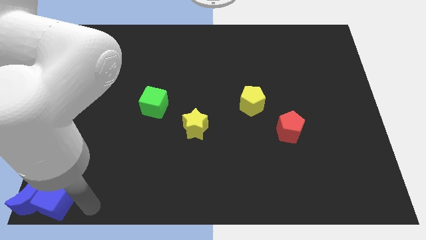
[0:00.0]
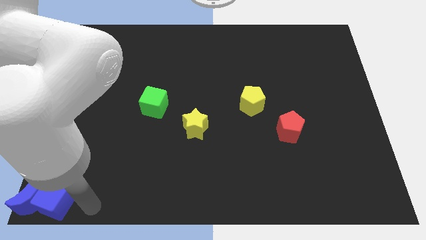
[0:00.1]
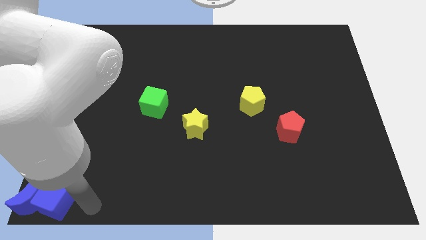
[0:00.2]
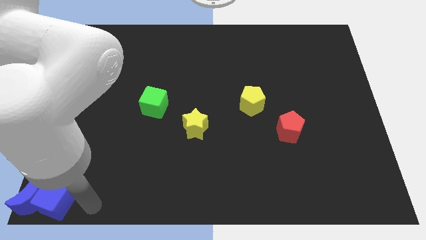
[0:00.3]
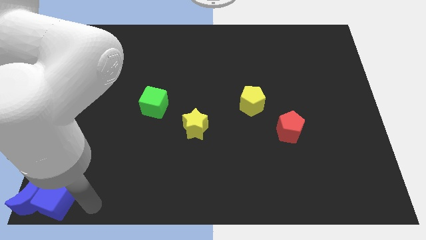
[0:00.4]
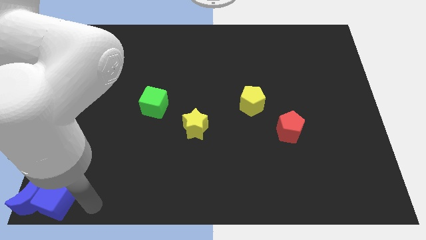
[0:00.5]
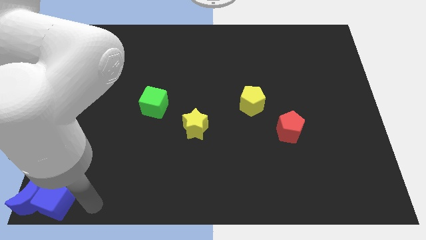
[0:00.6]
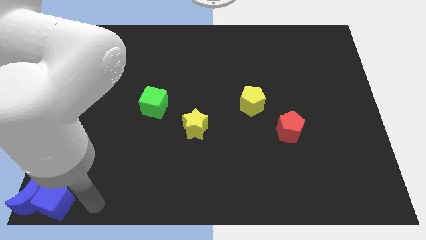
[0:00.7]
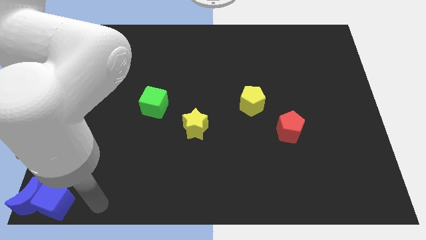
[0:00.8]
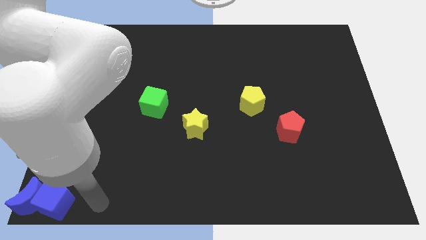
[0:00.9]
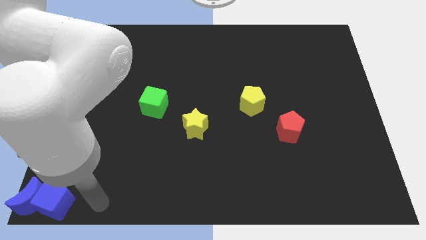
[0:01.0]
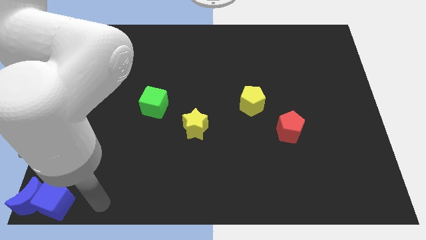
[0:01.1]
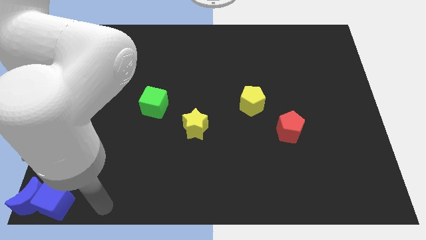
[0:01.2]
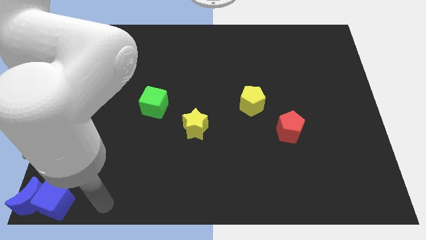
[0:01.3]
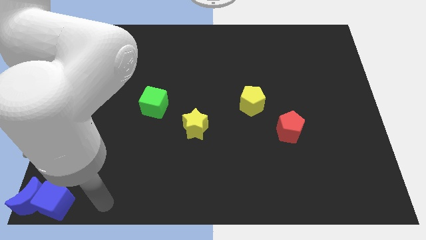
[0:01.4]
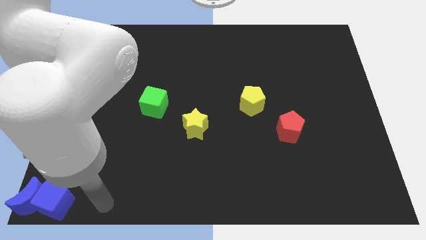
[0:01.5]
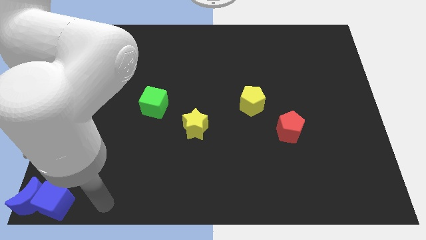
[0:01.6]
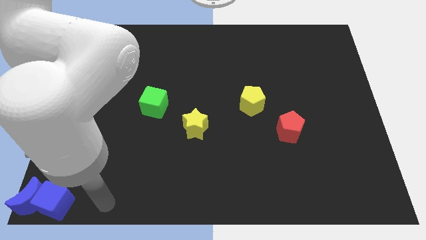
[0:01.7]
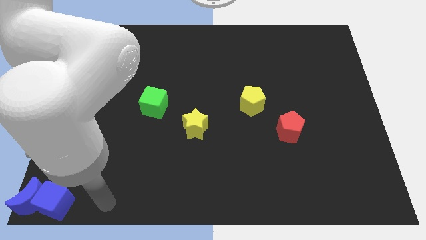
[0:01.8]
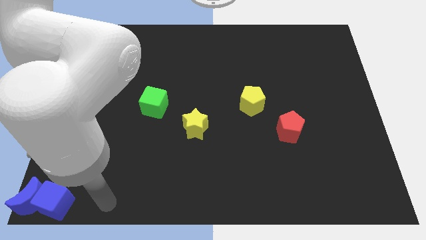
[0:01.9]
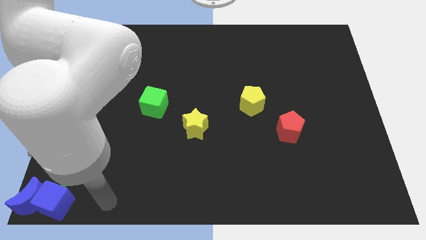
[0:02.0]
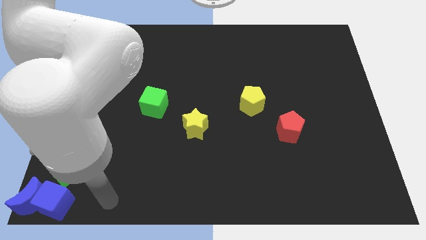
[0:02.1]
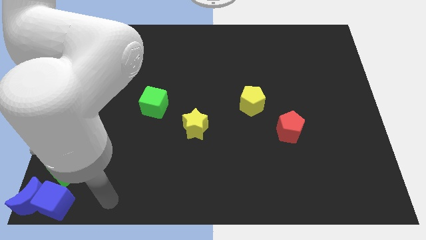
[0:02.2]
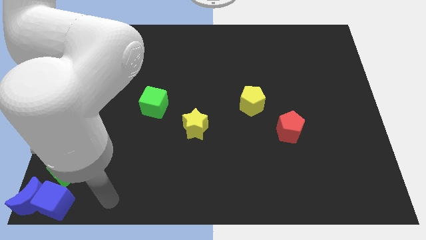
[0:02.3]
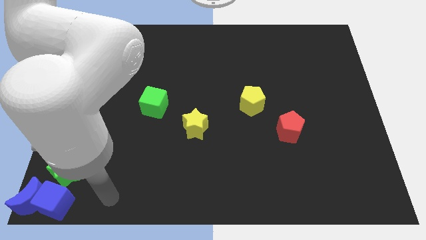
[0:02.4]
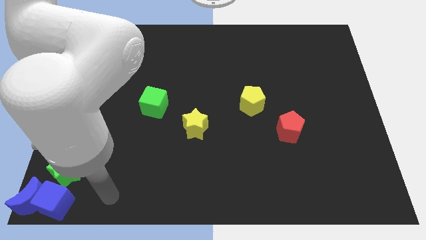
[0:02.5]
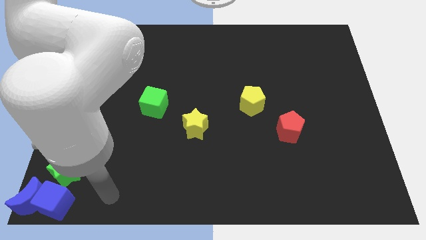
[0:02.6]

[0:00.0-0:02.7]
go away from the blue cube

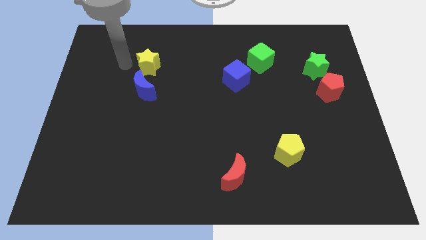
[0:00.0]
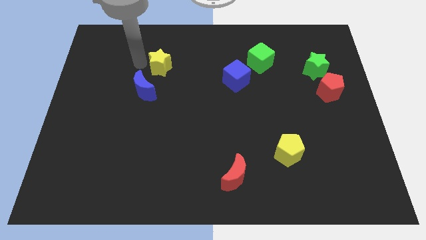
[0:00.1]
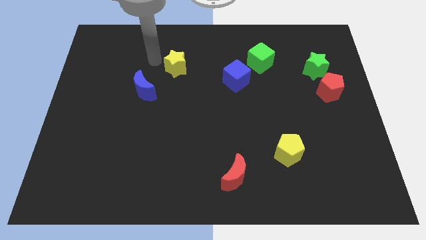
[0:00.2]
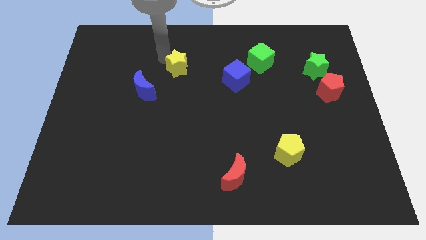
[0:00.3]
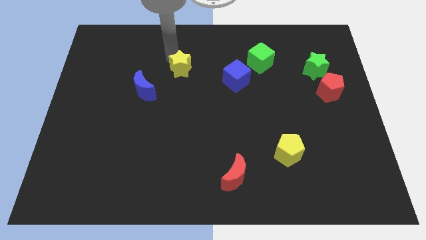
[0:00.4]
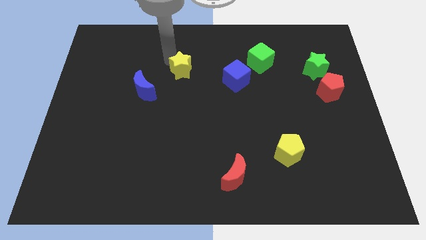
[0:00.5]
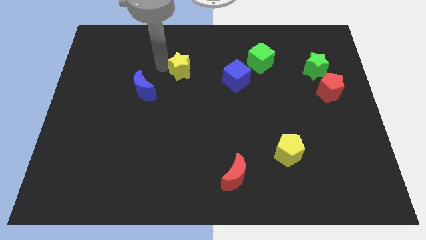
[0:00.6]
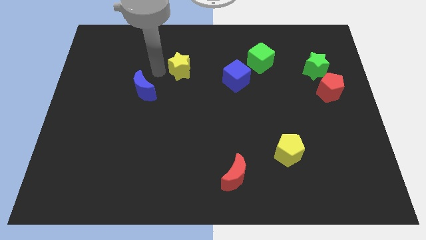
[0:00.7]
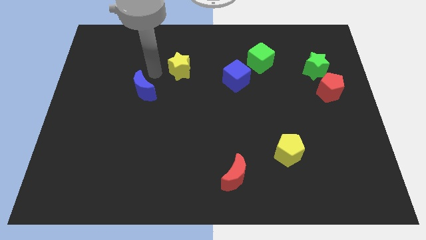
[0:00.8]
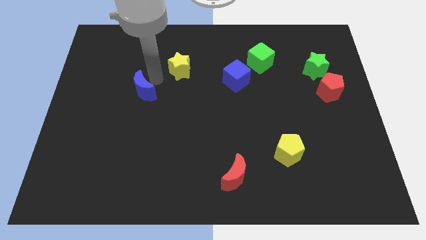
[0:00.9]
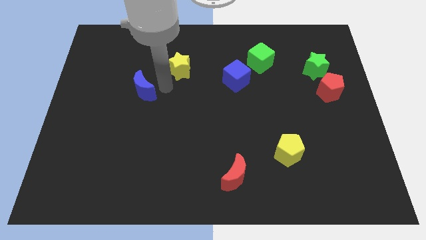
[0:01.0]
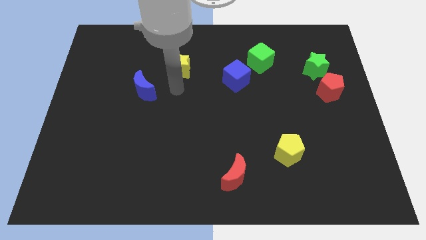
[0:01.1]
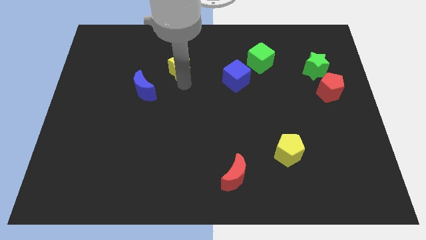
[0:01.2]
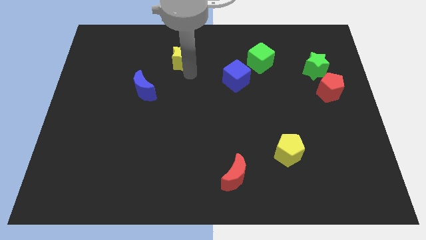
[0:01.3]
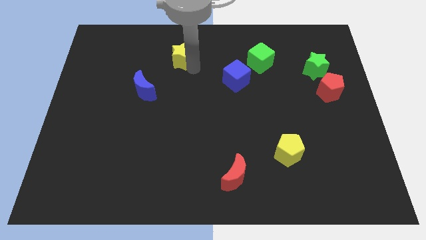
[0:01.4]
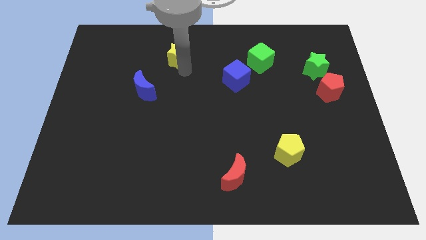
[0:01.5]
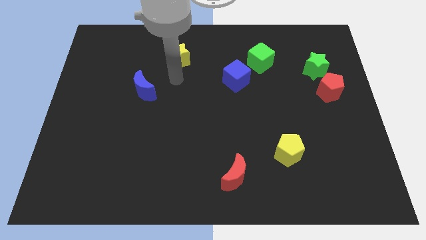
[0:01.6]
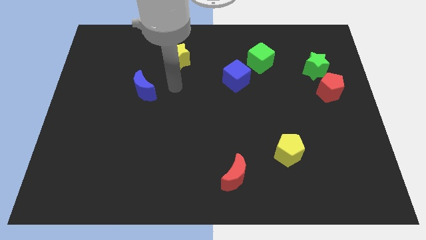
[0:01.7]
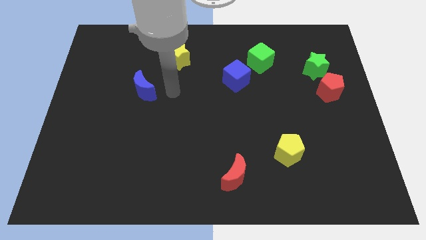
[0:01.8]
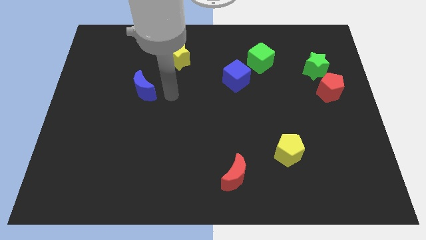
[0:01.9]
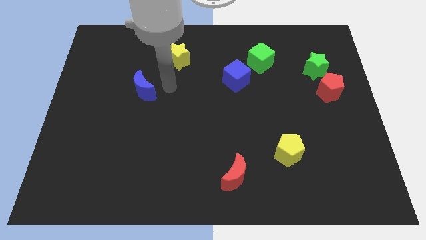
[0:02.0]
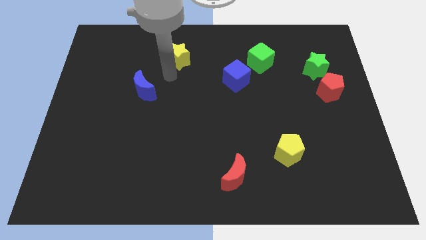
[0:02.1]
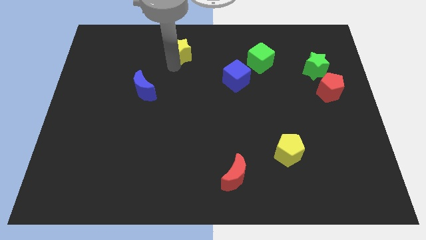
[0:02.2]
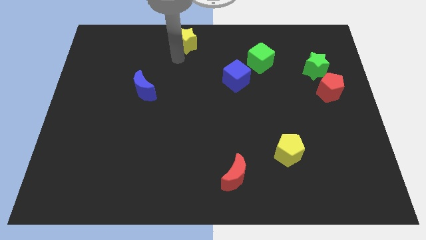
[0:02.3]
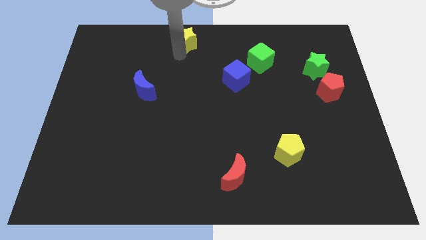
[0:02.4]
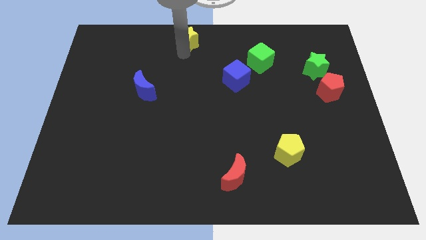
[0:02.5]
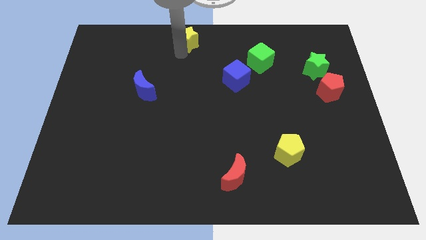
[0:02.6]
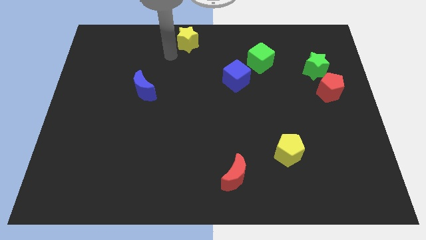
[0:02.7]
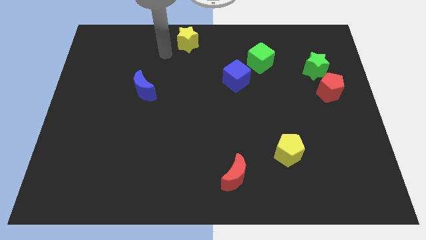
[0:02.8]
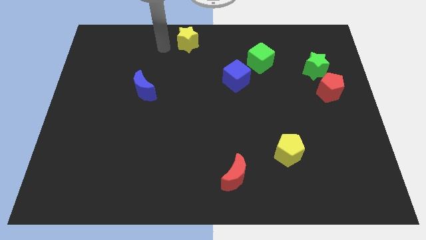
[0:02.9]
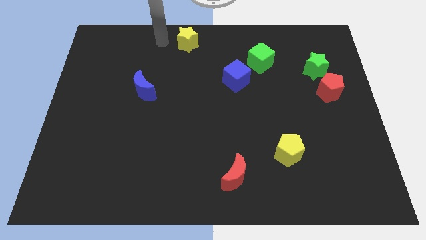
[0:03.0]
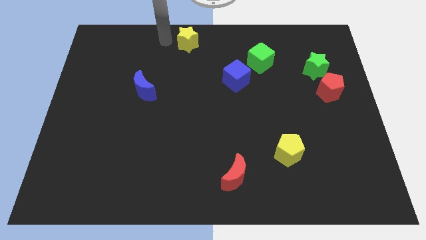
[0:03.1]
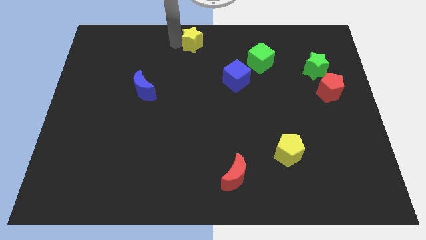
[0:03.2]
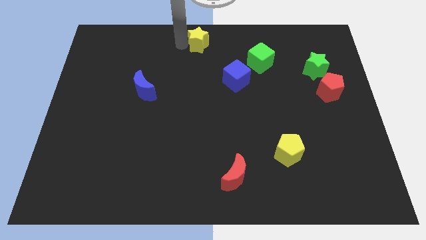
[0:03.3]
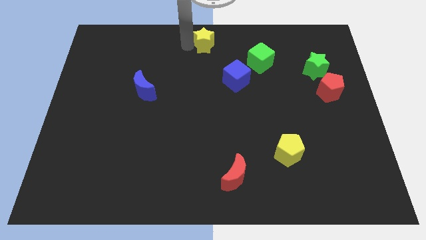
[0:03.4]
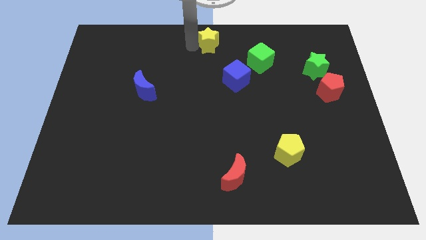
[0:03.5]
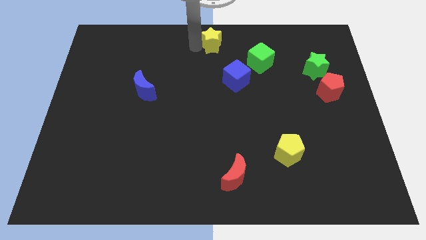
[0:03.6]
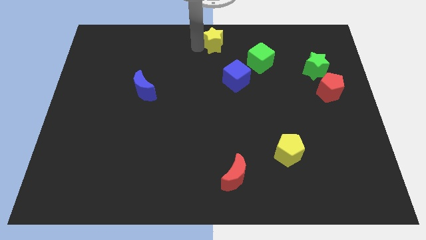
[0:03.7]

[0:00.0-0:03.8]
move the yellow star at the top center of the board

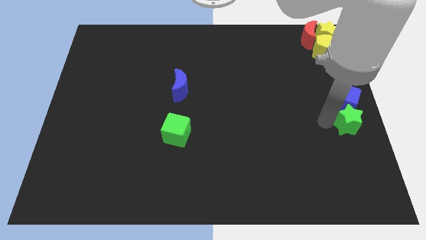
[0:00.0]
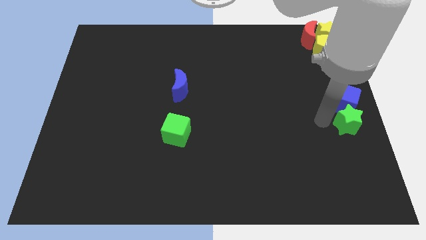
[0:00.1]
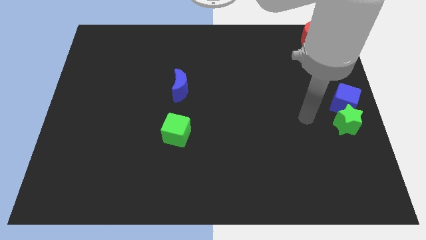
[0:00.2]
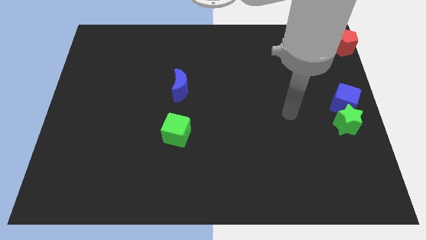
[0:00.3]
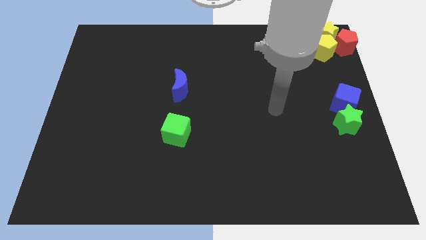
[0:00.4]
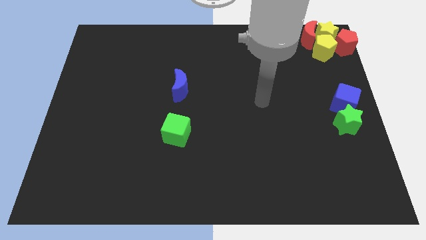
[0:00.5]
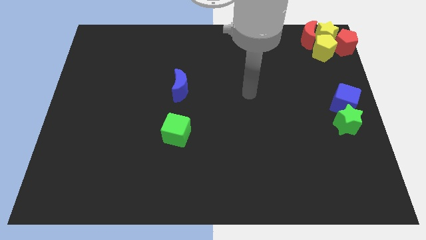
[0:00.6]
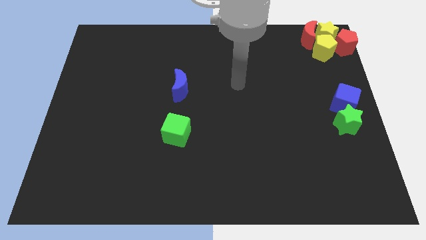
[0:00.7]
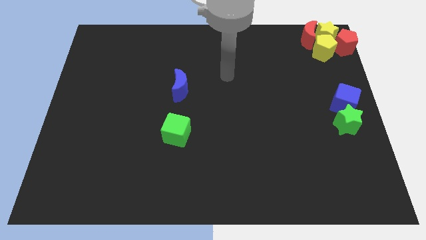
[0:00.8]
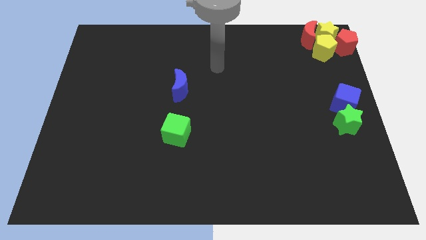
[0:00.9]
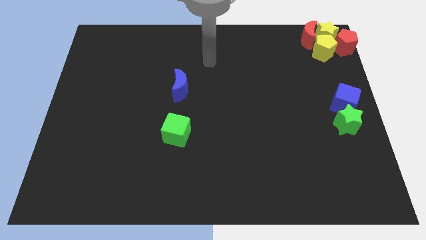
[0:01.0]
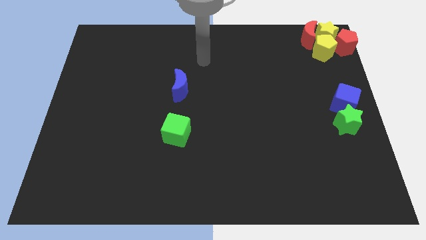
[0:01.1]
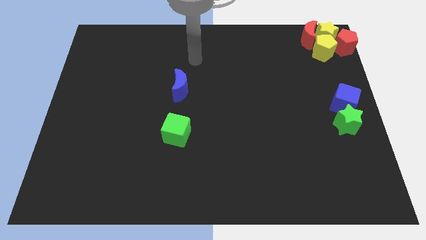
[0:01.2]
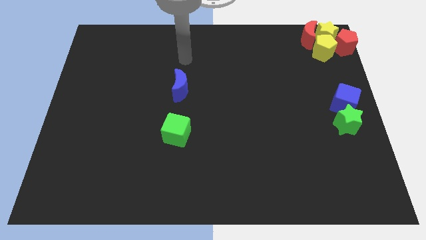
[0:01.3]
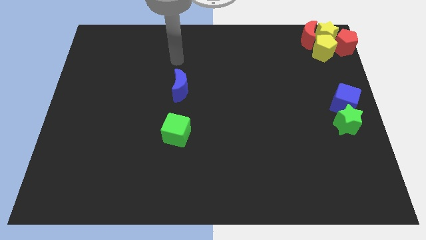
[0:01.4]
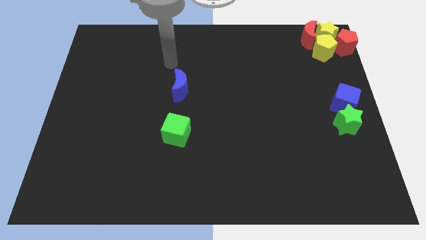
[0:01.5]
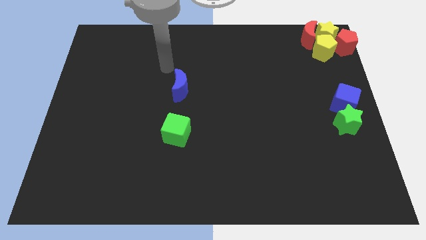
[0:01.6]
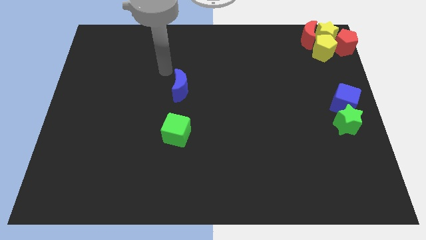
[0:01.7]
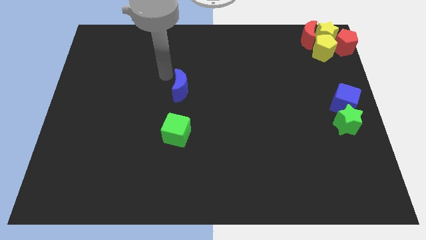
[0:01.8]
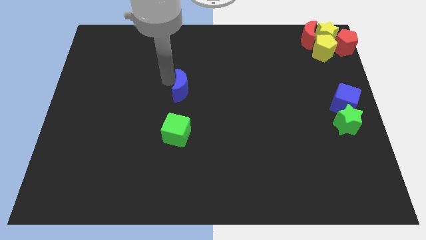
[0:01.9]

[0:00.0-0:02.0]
point your arm at the top left of blue moon

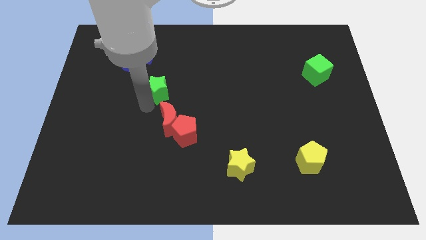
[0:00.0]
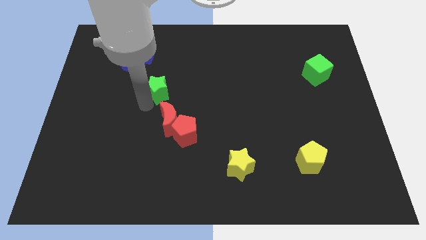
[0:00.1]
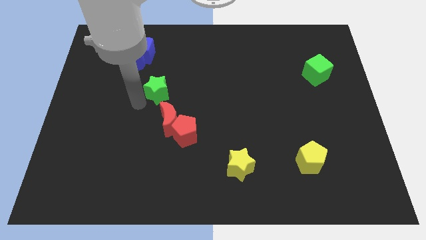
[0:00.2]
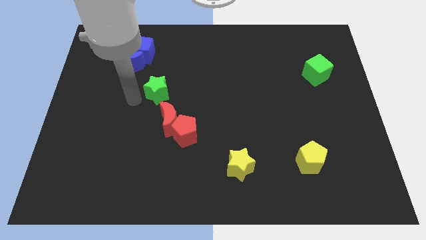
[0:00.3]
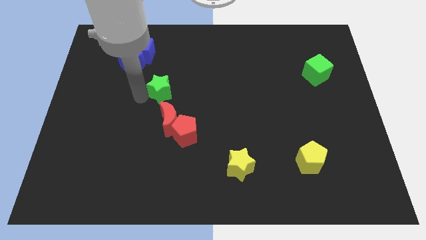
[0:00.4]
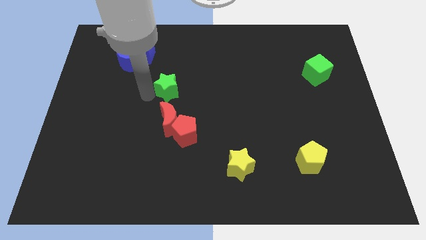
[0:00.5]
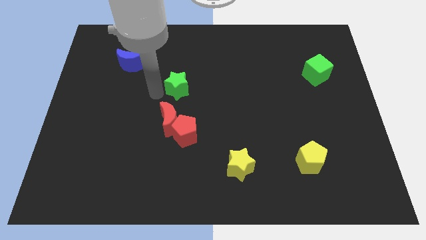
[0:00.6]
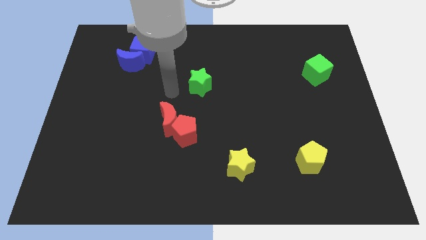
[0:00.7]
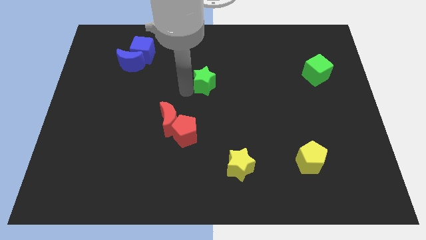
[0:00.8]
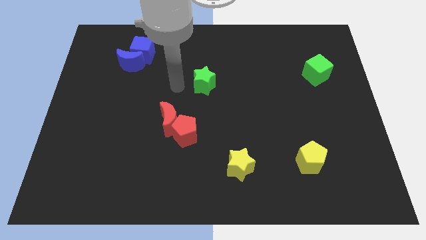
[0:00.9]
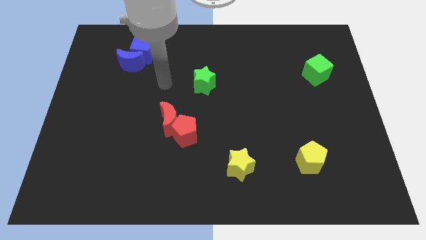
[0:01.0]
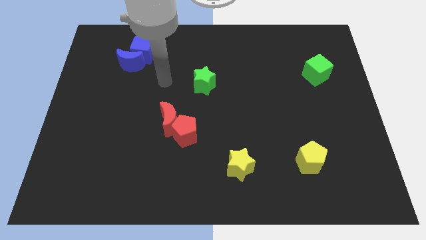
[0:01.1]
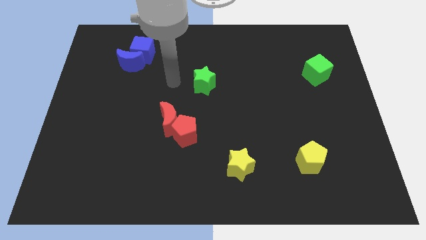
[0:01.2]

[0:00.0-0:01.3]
place the green star to the top center of the board
